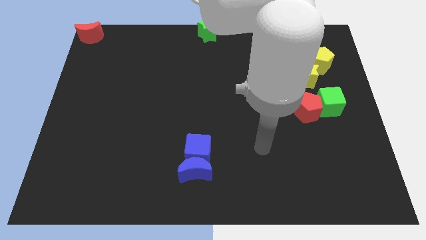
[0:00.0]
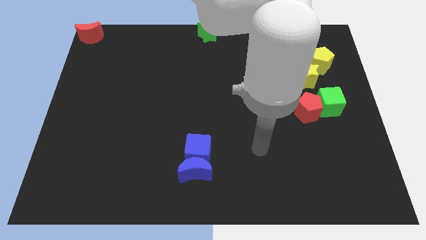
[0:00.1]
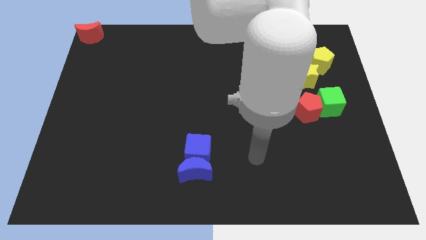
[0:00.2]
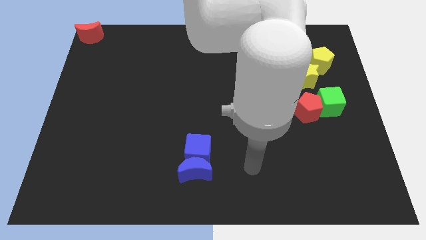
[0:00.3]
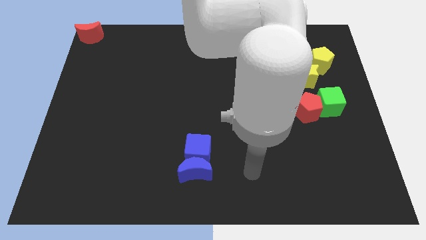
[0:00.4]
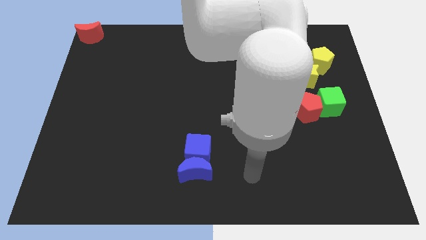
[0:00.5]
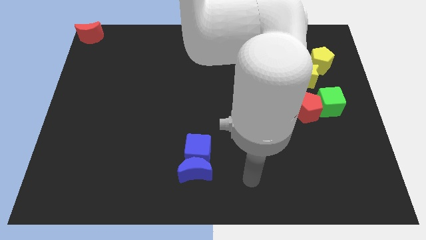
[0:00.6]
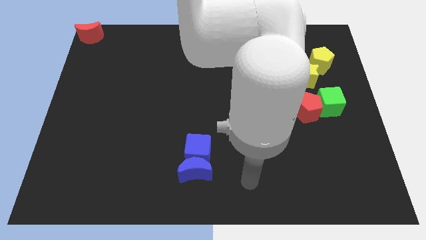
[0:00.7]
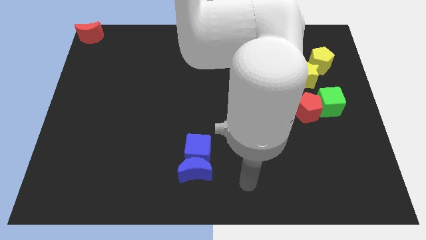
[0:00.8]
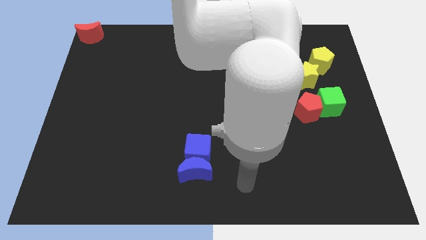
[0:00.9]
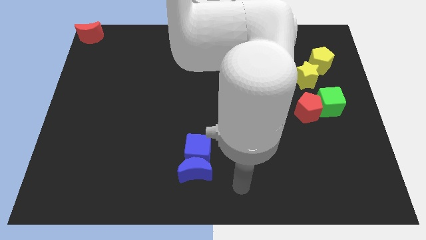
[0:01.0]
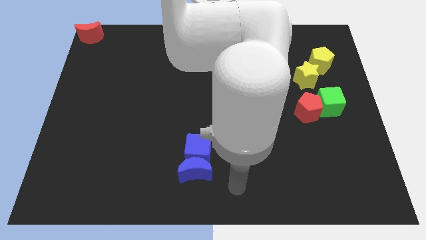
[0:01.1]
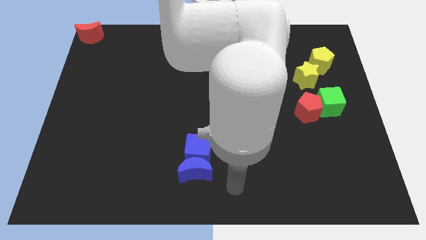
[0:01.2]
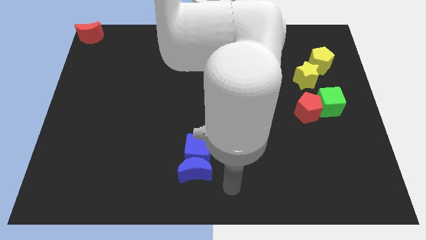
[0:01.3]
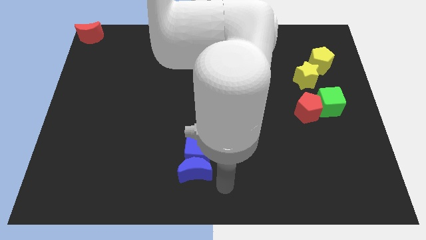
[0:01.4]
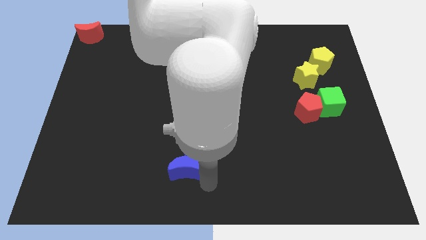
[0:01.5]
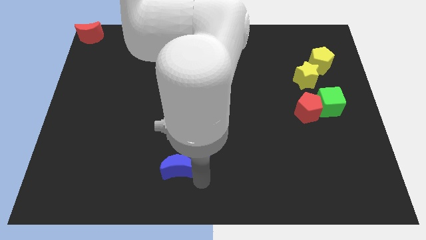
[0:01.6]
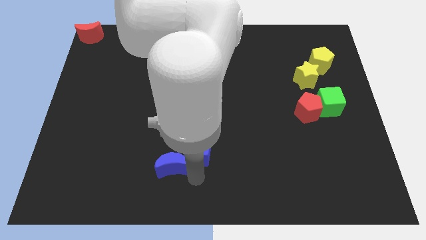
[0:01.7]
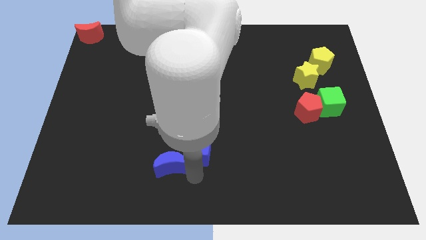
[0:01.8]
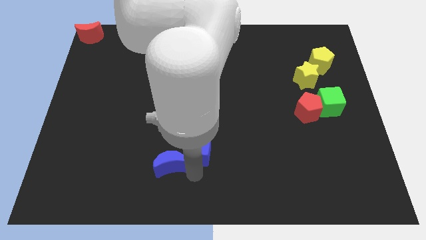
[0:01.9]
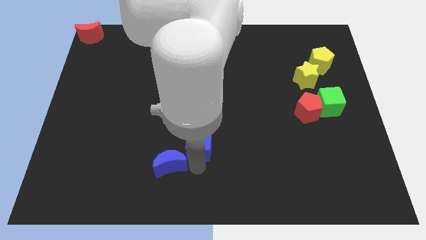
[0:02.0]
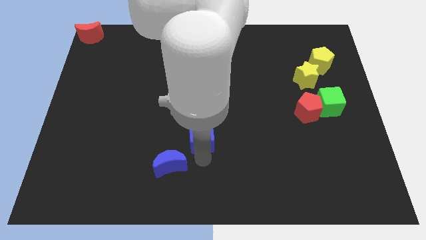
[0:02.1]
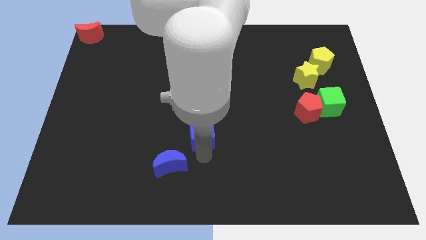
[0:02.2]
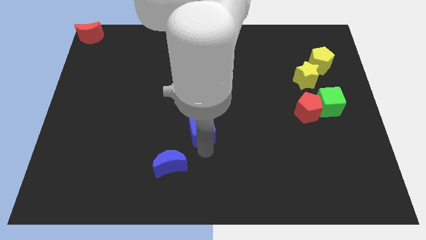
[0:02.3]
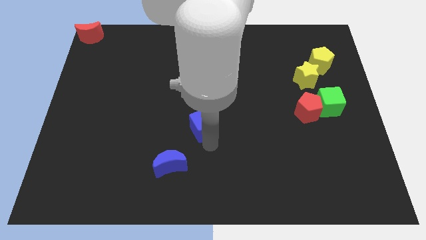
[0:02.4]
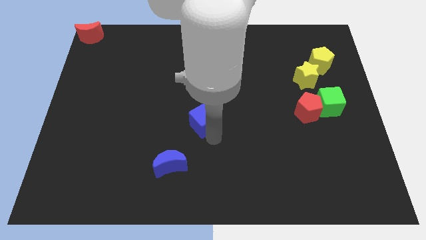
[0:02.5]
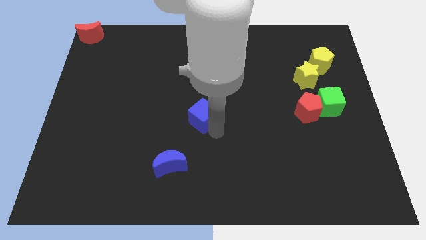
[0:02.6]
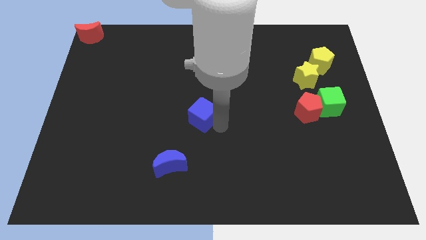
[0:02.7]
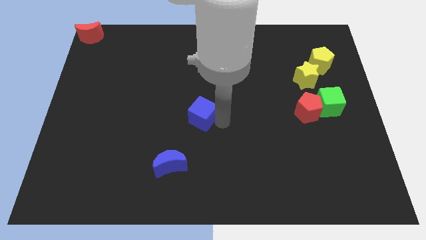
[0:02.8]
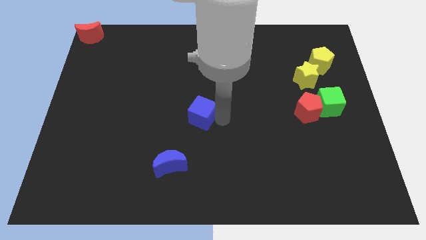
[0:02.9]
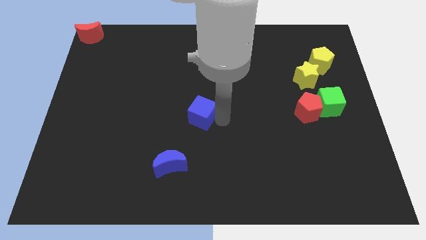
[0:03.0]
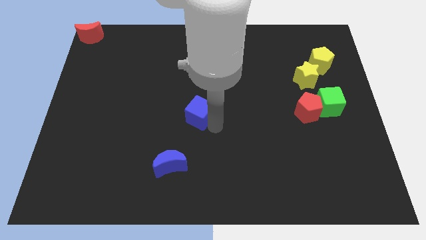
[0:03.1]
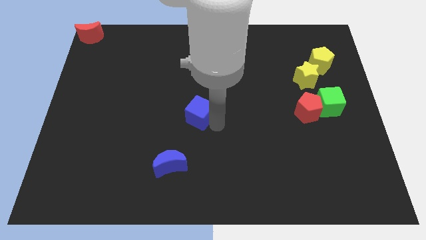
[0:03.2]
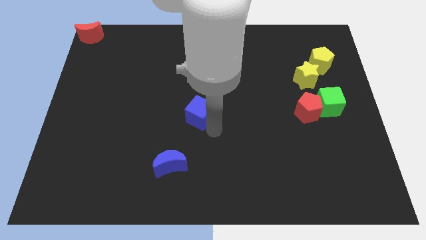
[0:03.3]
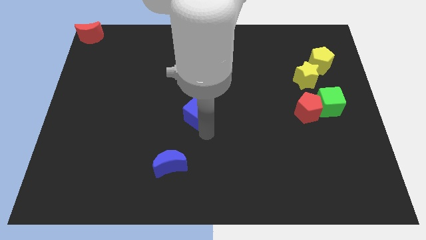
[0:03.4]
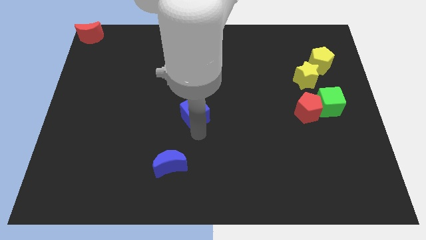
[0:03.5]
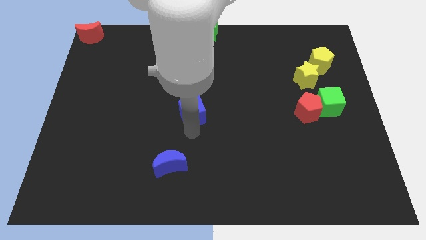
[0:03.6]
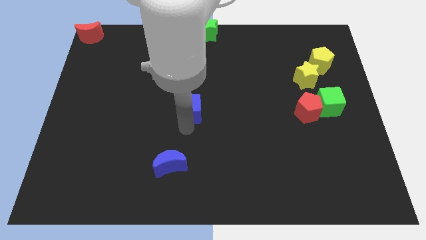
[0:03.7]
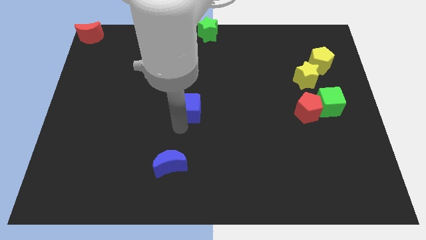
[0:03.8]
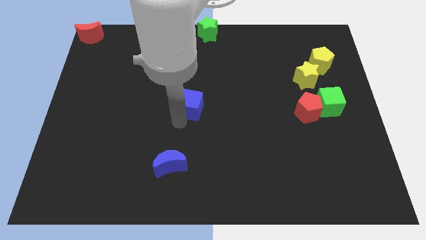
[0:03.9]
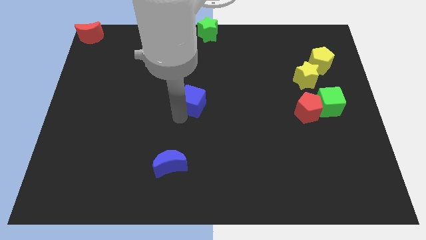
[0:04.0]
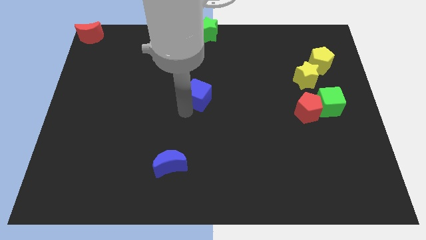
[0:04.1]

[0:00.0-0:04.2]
place blue cube to the center of the board

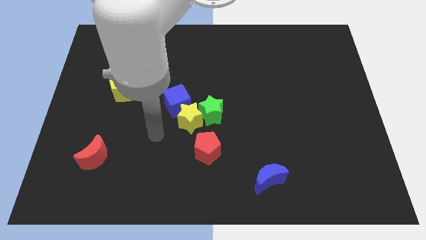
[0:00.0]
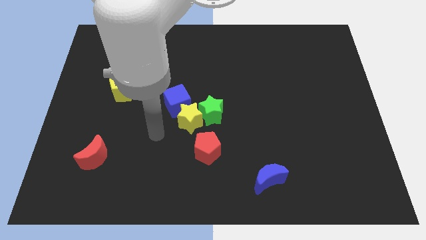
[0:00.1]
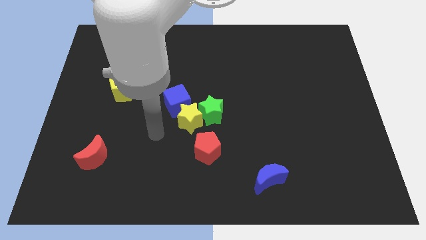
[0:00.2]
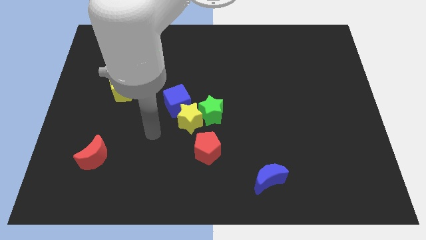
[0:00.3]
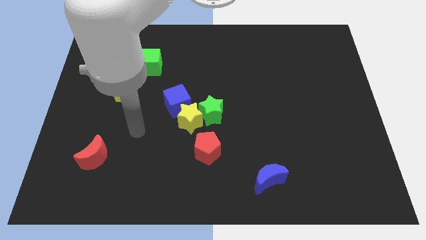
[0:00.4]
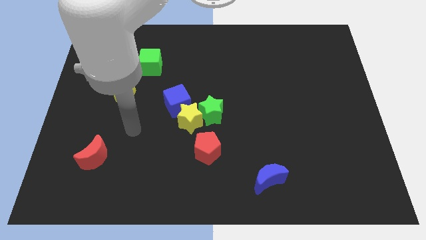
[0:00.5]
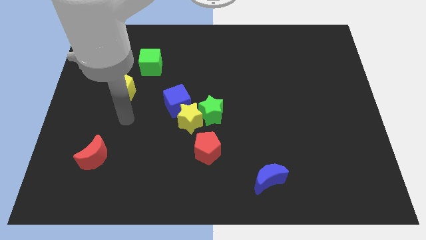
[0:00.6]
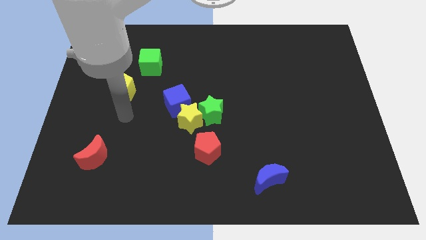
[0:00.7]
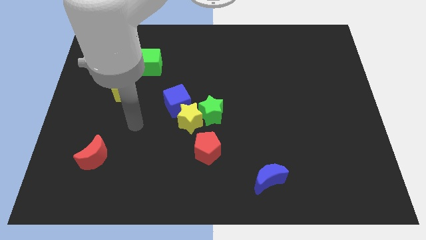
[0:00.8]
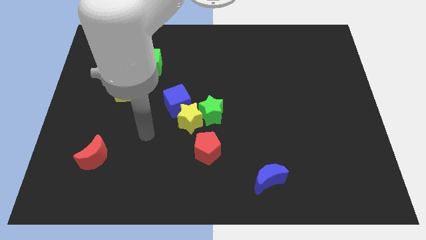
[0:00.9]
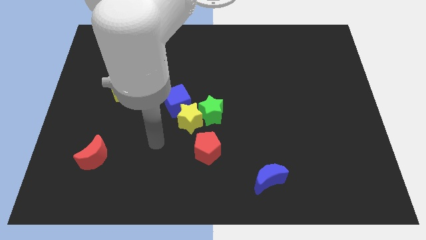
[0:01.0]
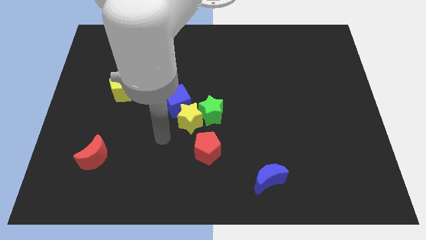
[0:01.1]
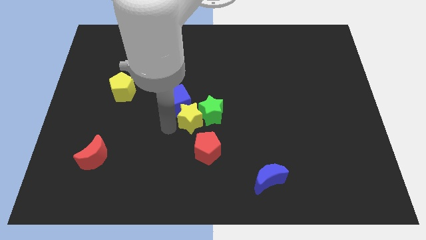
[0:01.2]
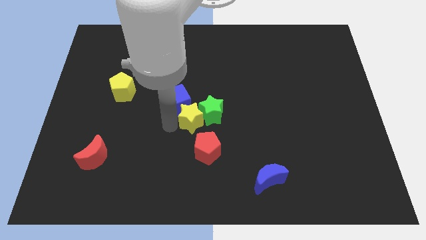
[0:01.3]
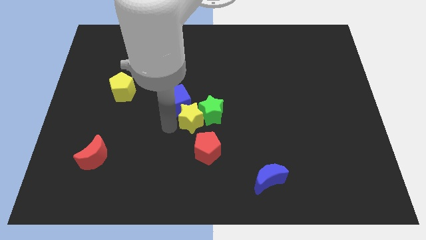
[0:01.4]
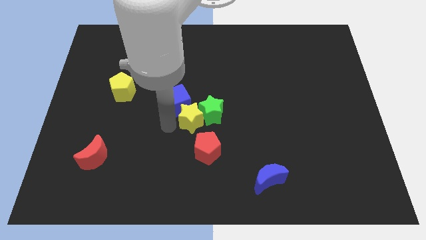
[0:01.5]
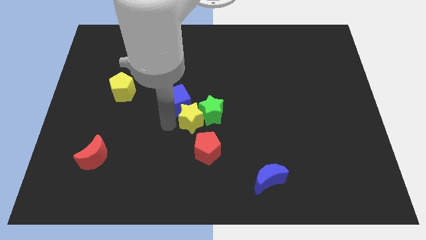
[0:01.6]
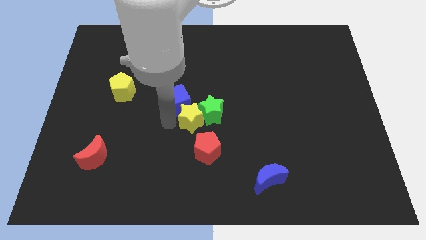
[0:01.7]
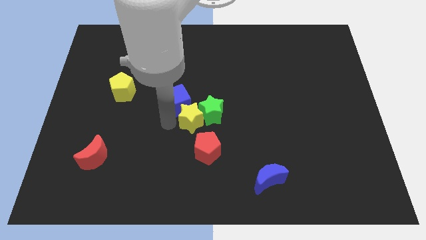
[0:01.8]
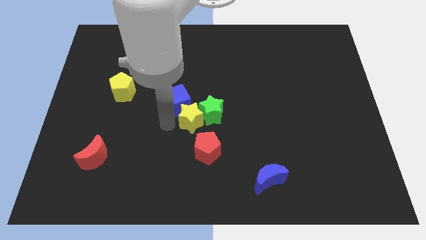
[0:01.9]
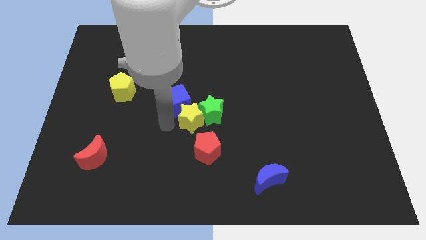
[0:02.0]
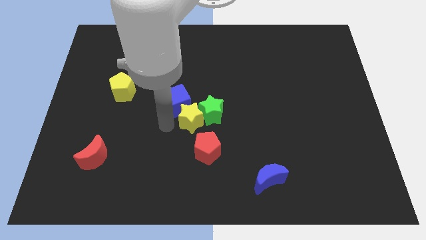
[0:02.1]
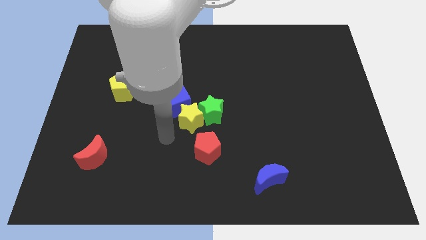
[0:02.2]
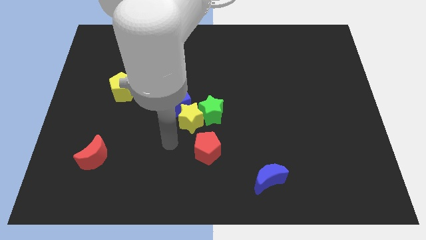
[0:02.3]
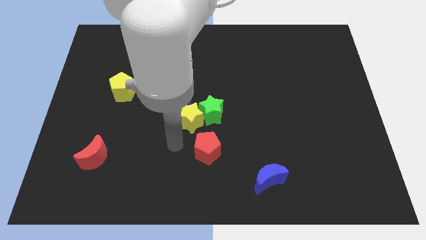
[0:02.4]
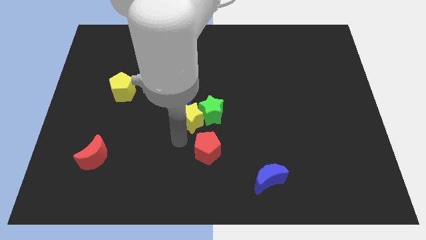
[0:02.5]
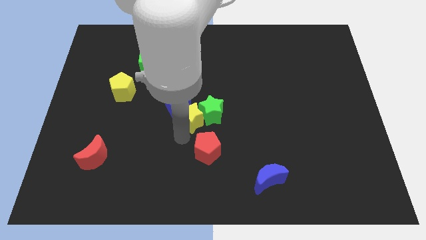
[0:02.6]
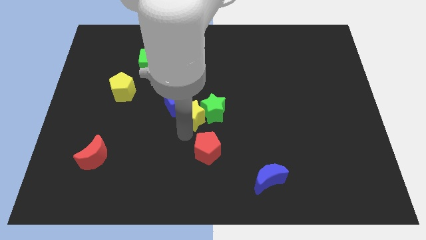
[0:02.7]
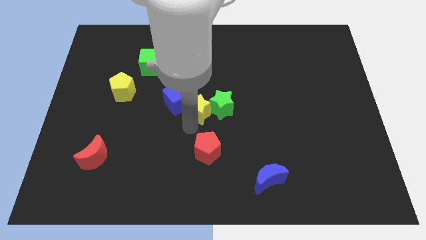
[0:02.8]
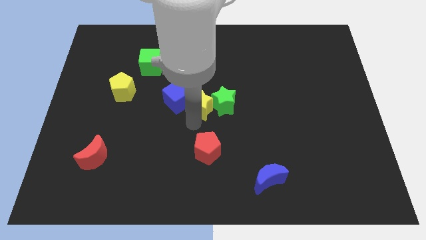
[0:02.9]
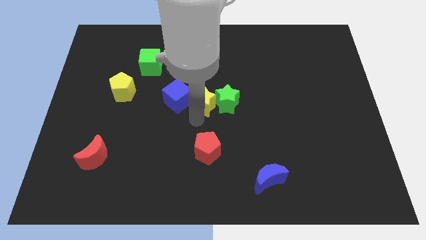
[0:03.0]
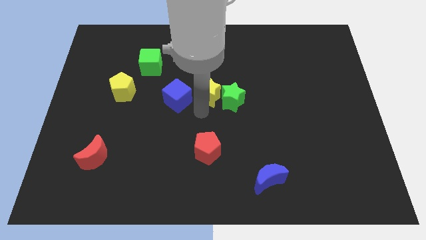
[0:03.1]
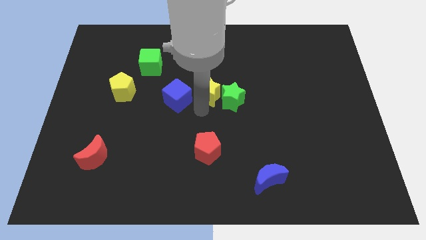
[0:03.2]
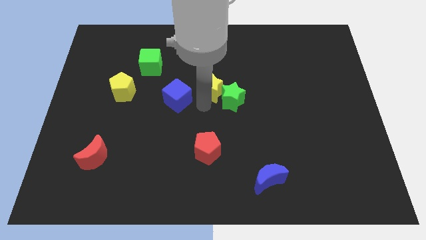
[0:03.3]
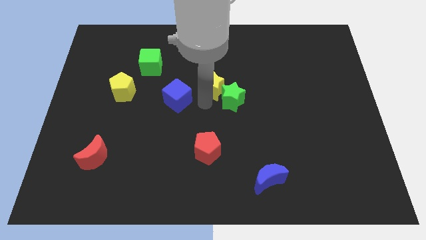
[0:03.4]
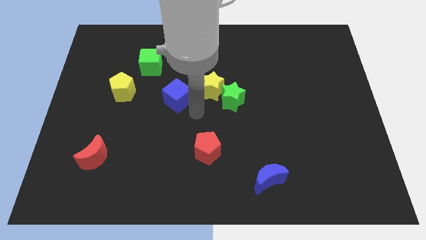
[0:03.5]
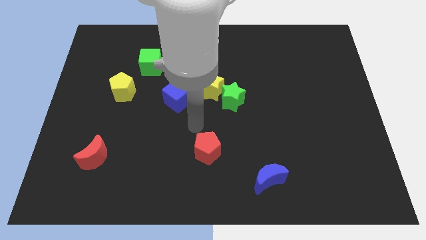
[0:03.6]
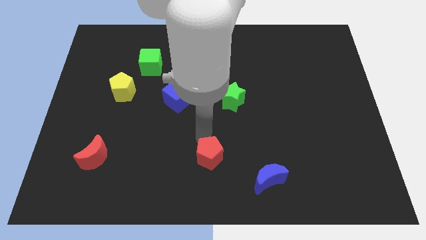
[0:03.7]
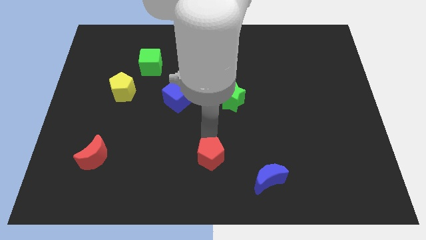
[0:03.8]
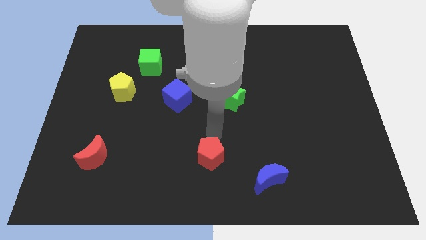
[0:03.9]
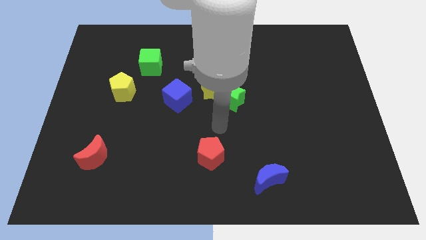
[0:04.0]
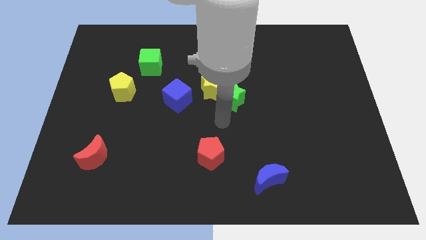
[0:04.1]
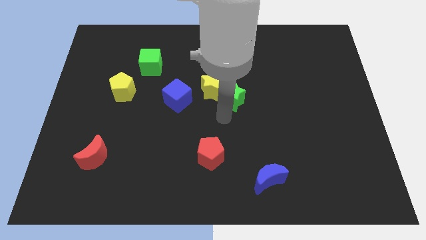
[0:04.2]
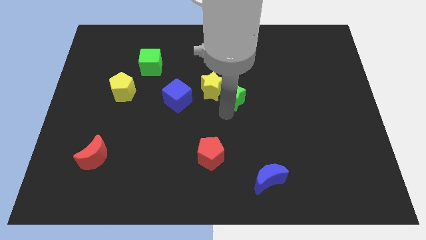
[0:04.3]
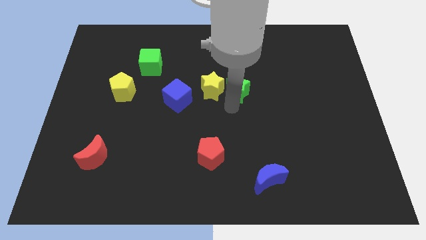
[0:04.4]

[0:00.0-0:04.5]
move stars to the top of the board

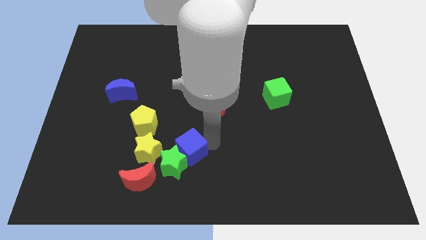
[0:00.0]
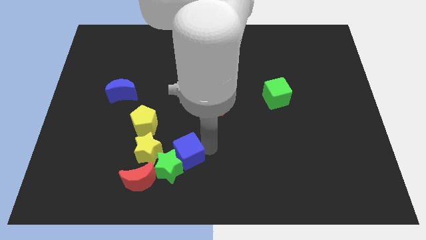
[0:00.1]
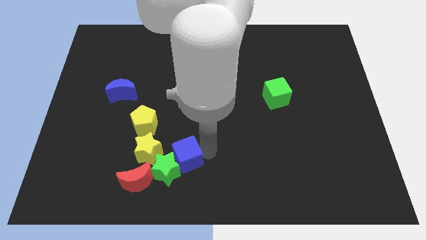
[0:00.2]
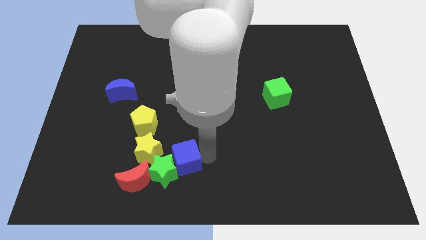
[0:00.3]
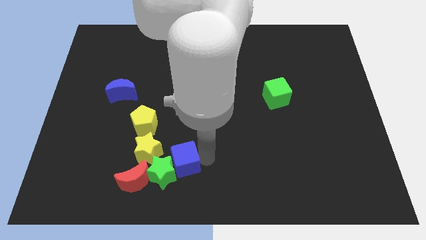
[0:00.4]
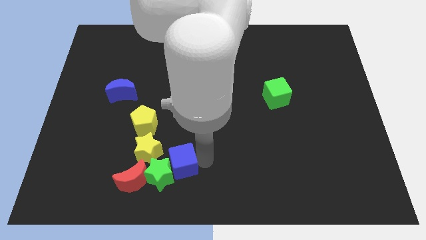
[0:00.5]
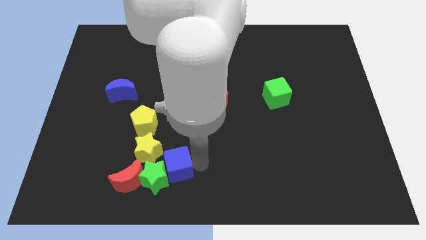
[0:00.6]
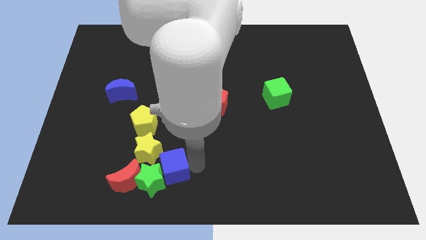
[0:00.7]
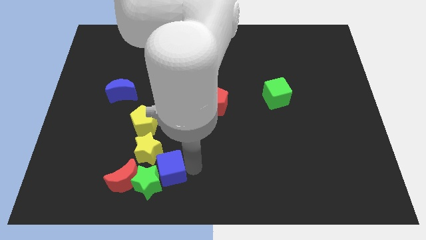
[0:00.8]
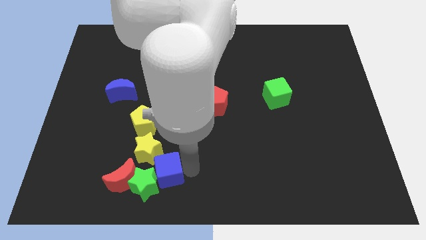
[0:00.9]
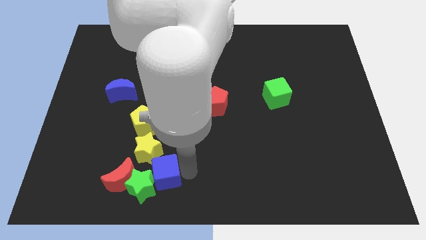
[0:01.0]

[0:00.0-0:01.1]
move green stared moonblue cube below the yellow star
